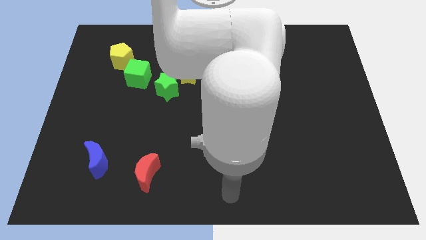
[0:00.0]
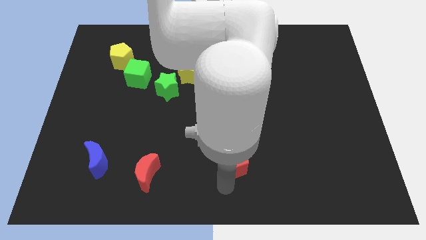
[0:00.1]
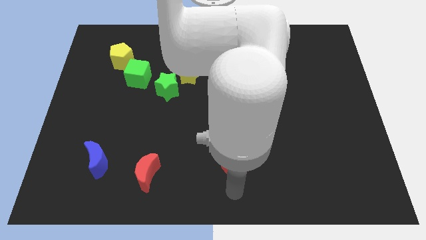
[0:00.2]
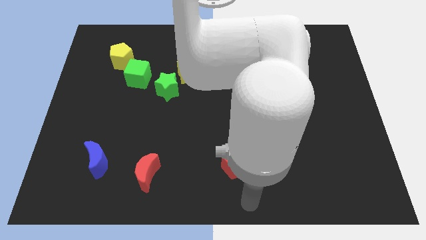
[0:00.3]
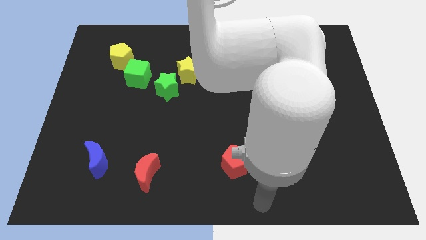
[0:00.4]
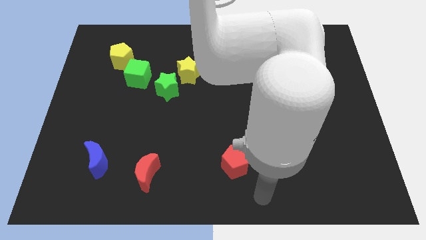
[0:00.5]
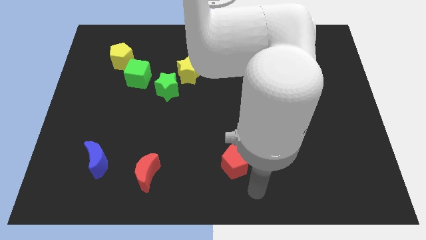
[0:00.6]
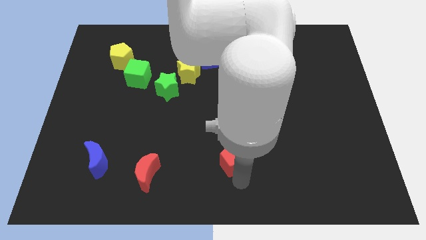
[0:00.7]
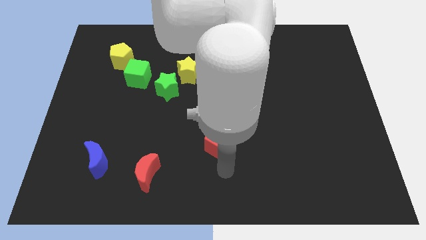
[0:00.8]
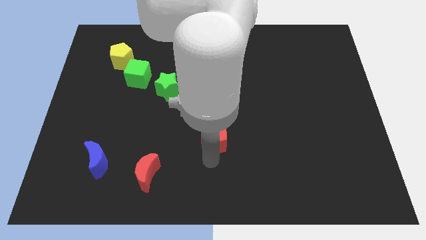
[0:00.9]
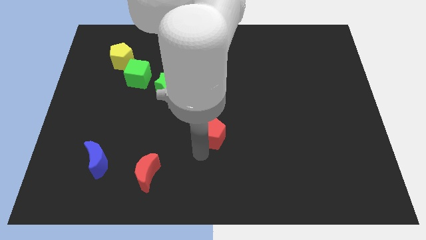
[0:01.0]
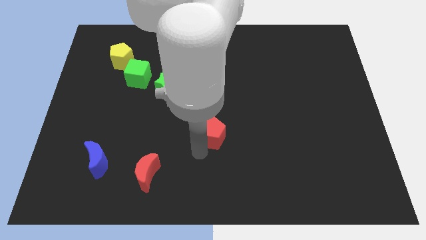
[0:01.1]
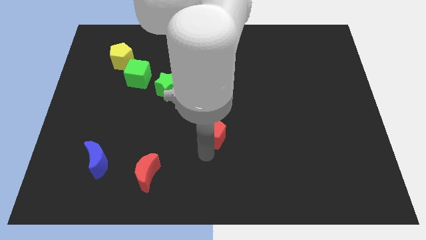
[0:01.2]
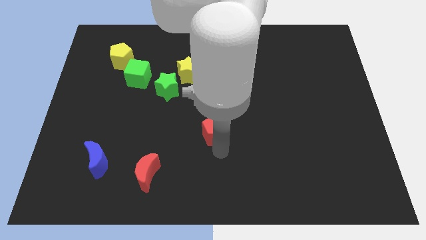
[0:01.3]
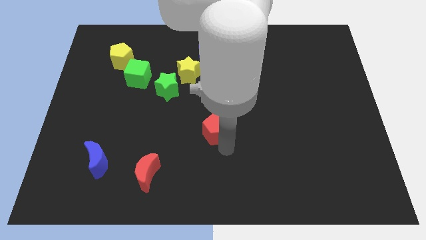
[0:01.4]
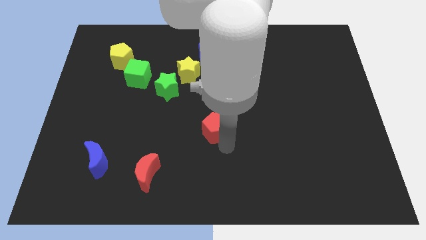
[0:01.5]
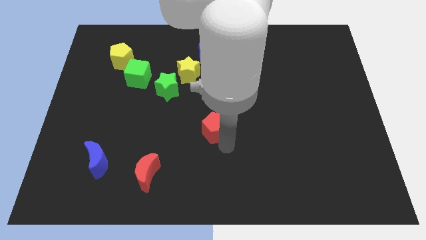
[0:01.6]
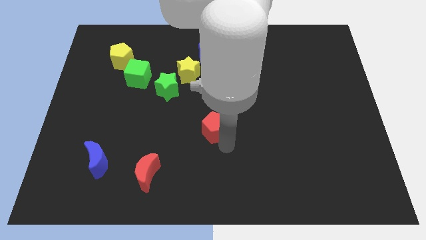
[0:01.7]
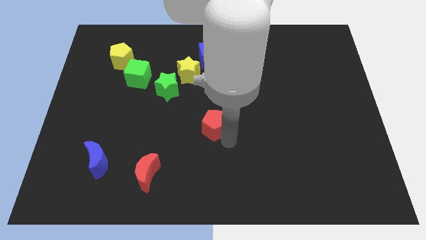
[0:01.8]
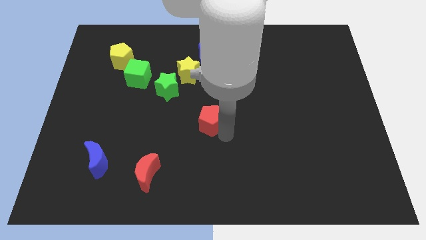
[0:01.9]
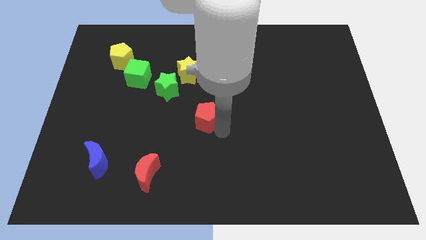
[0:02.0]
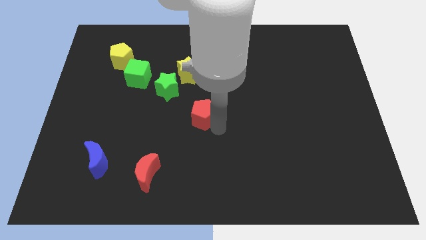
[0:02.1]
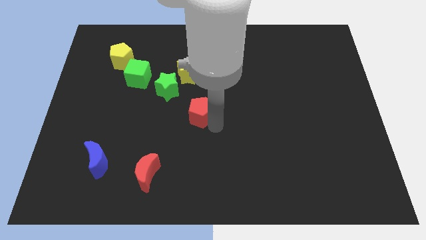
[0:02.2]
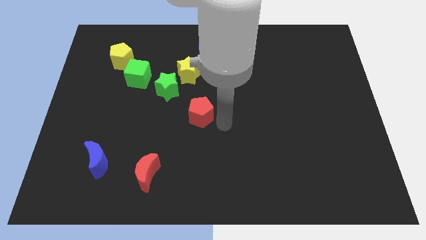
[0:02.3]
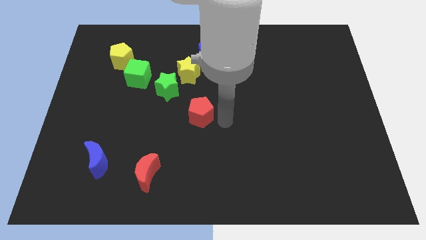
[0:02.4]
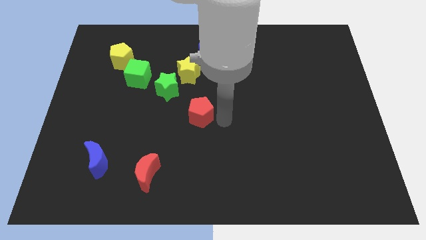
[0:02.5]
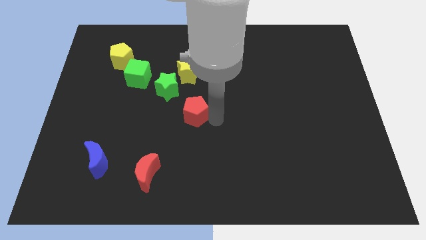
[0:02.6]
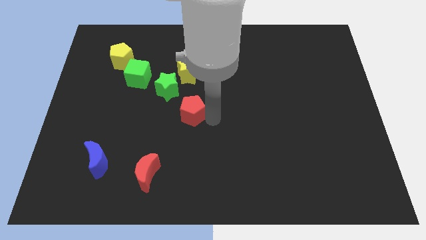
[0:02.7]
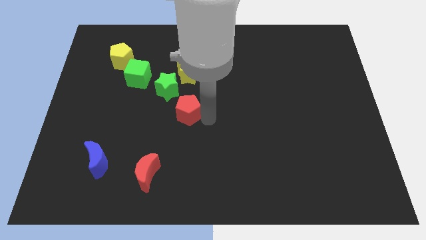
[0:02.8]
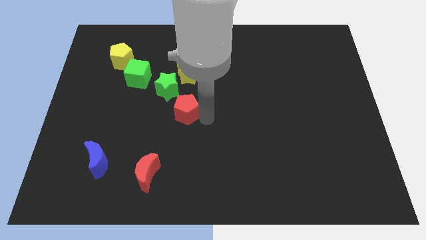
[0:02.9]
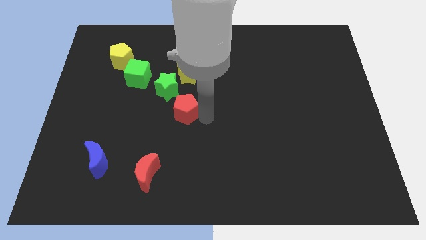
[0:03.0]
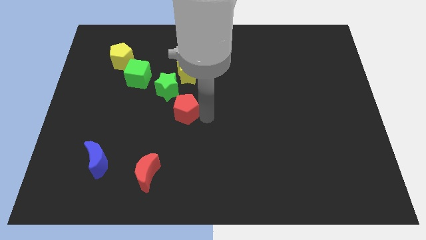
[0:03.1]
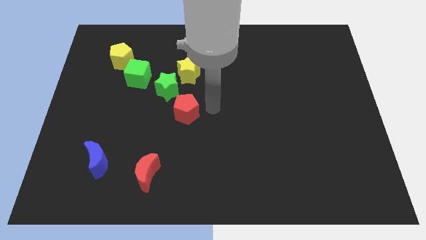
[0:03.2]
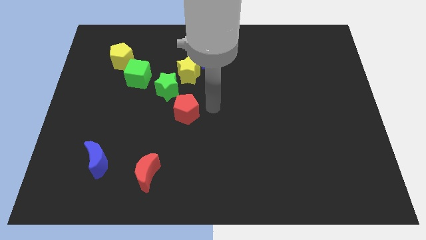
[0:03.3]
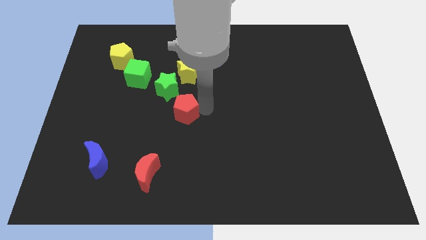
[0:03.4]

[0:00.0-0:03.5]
place the red pentagon on the bottom side of the yellow star

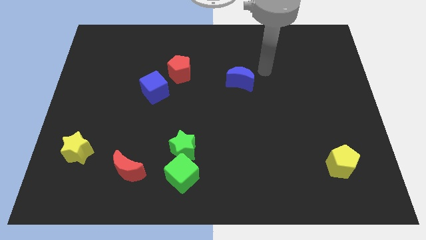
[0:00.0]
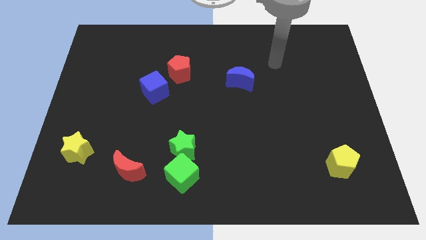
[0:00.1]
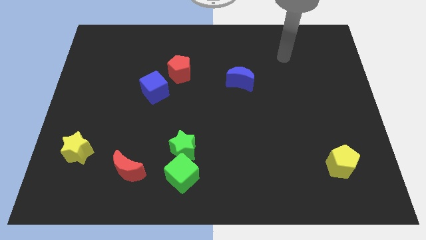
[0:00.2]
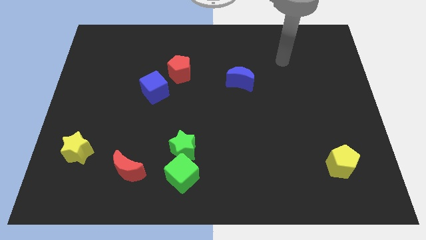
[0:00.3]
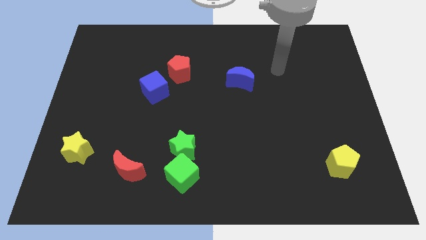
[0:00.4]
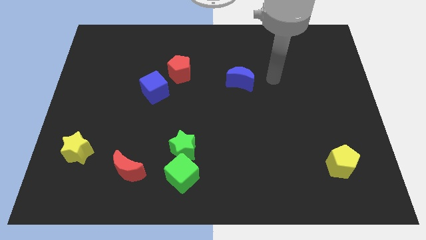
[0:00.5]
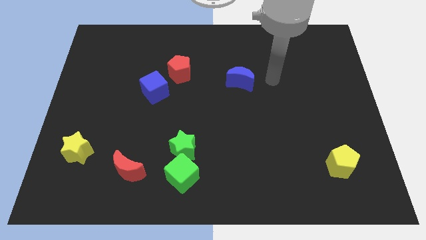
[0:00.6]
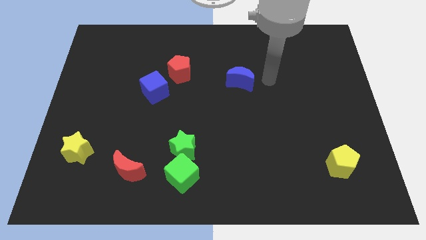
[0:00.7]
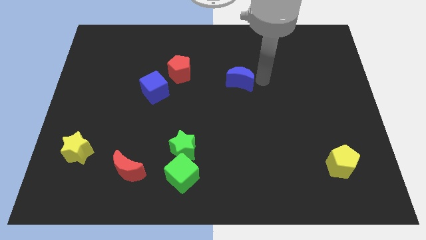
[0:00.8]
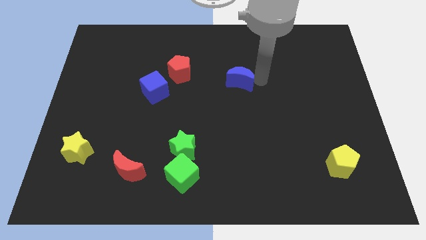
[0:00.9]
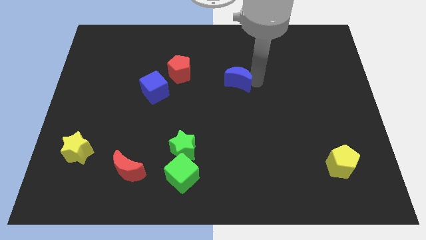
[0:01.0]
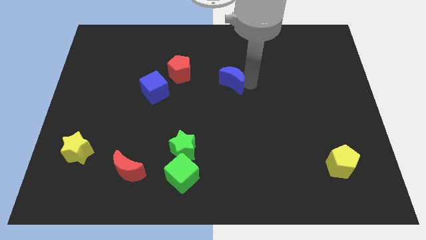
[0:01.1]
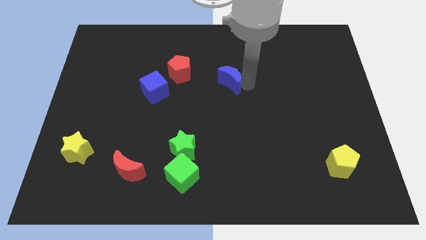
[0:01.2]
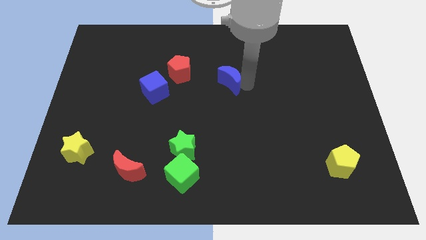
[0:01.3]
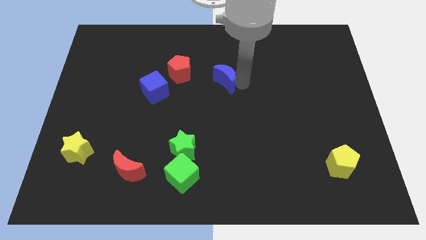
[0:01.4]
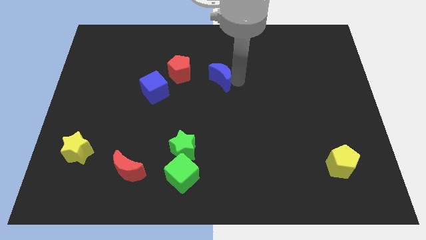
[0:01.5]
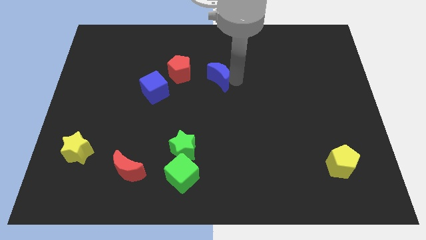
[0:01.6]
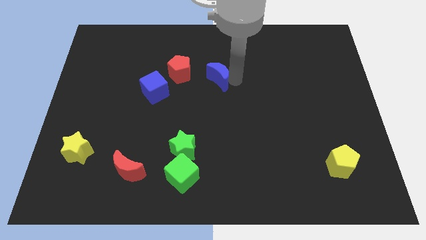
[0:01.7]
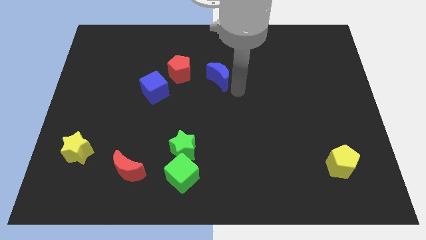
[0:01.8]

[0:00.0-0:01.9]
move the blue moon slightly to the left

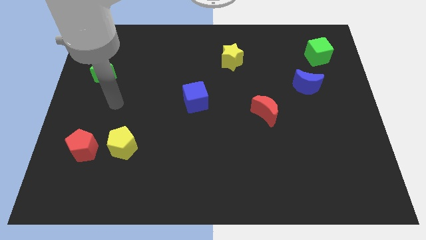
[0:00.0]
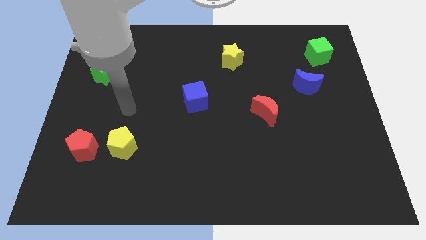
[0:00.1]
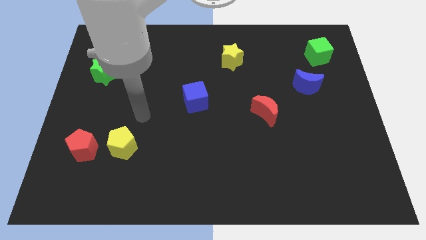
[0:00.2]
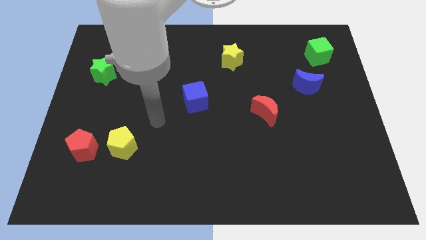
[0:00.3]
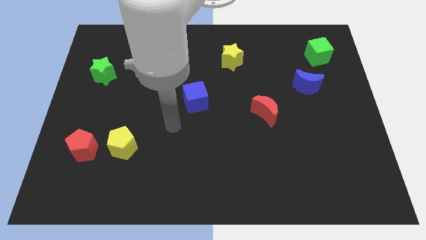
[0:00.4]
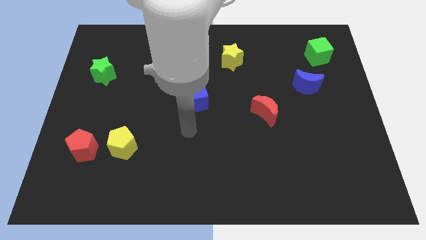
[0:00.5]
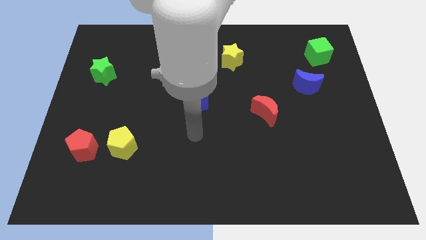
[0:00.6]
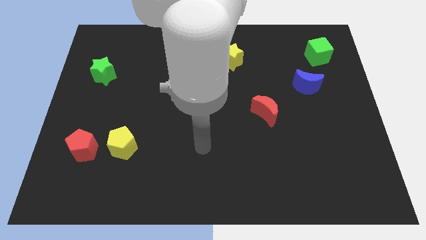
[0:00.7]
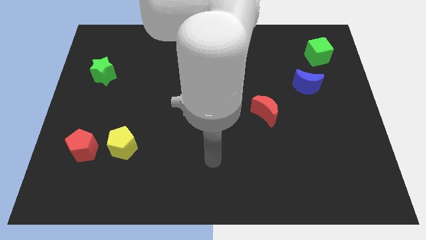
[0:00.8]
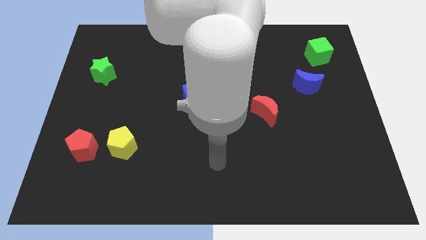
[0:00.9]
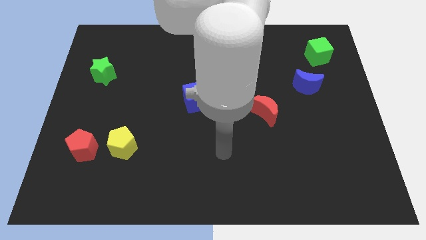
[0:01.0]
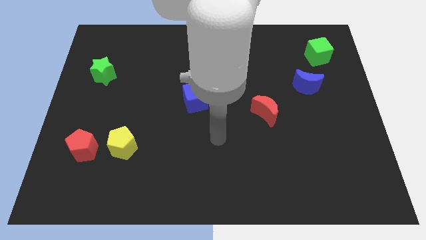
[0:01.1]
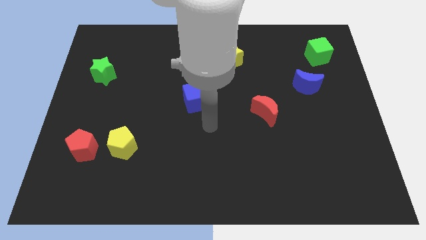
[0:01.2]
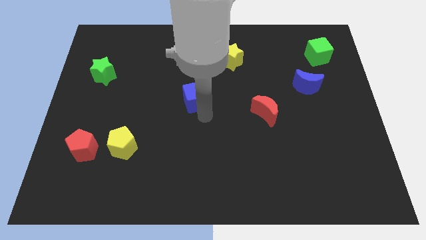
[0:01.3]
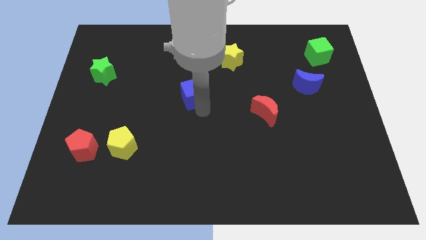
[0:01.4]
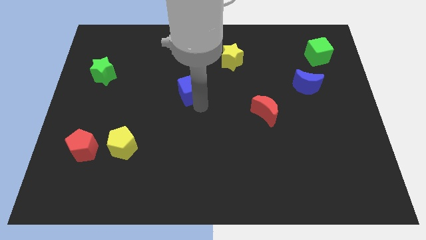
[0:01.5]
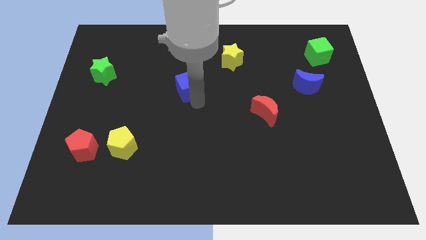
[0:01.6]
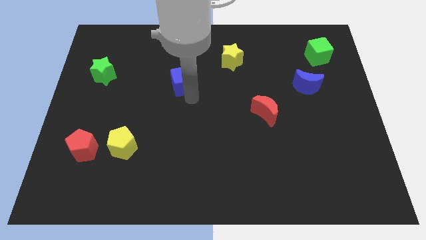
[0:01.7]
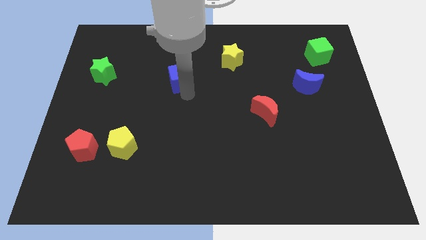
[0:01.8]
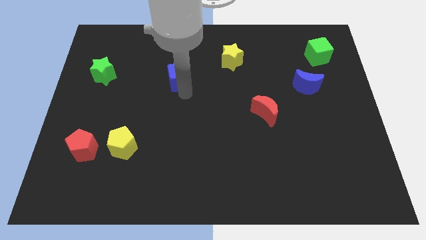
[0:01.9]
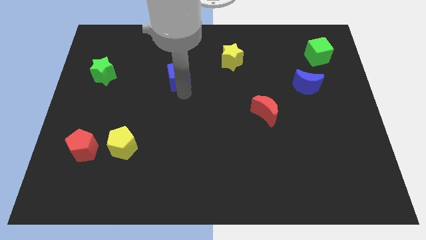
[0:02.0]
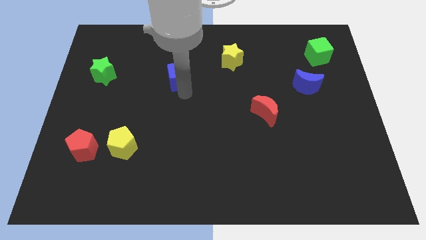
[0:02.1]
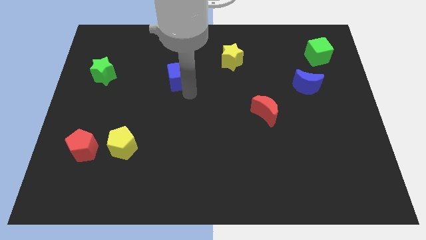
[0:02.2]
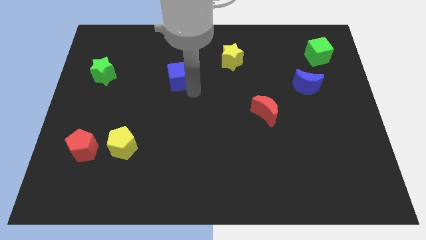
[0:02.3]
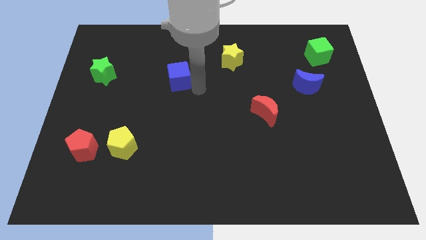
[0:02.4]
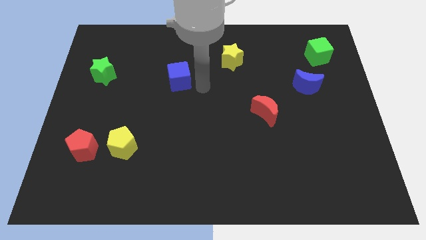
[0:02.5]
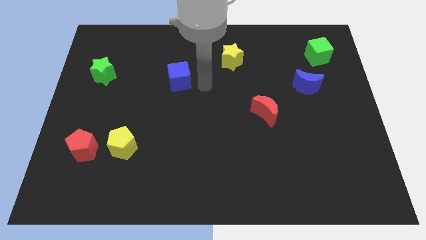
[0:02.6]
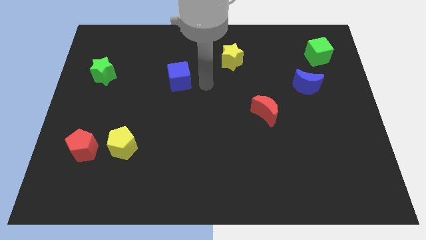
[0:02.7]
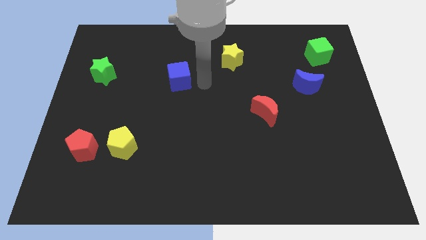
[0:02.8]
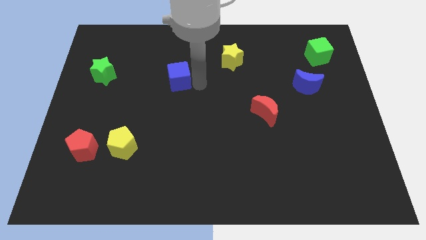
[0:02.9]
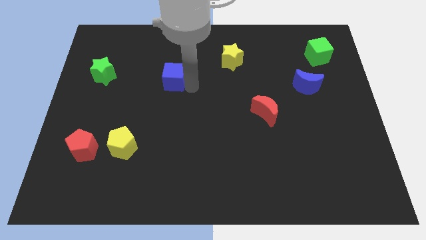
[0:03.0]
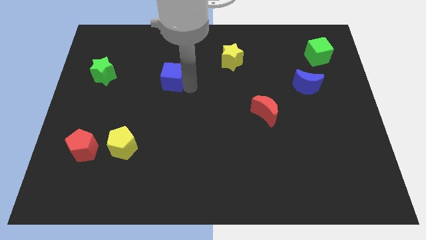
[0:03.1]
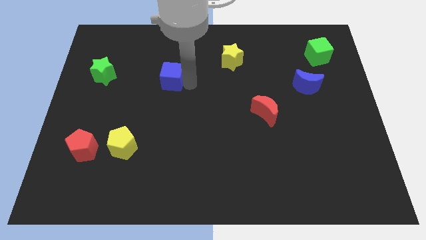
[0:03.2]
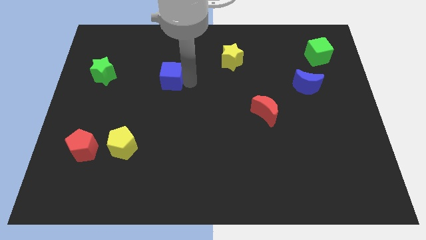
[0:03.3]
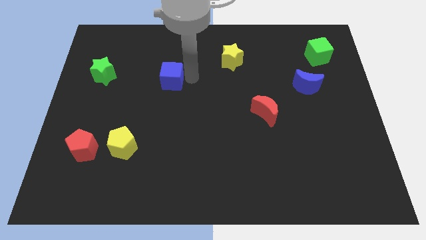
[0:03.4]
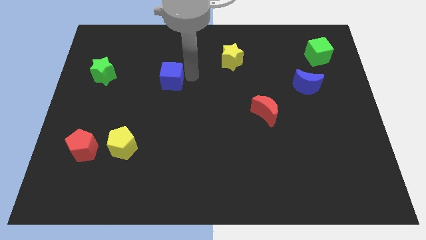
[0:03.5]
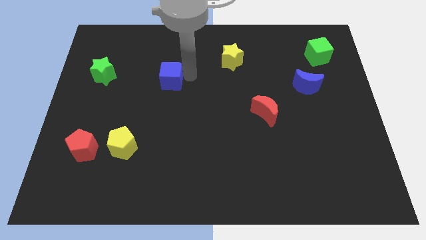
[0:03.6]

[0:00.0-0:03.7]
move the blue cube towards up
